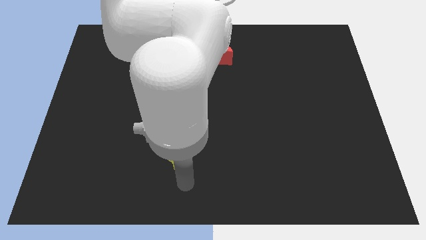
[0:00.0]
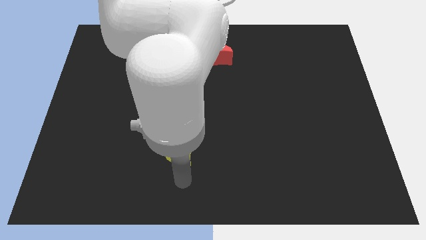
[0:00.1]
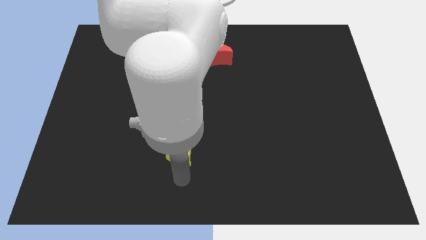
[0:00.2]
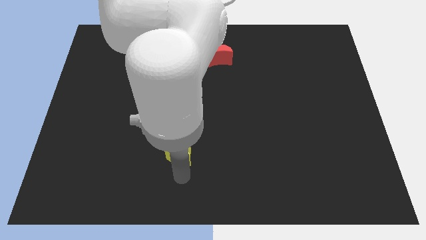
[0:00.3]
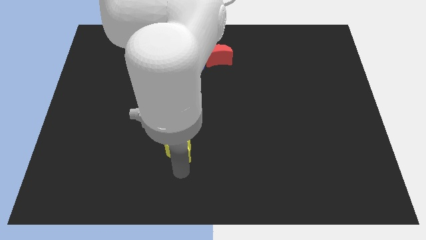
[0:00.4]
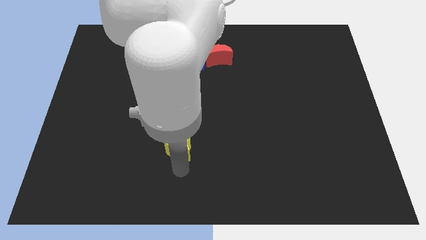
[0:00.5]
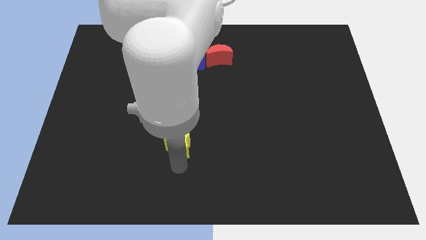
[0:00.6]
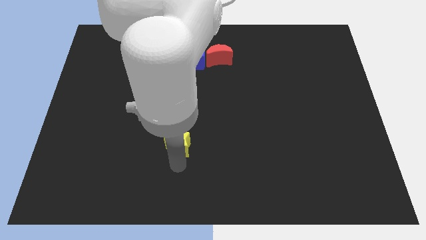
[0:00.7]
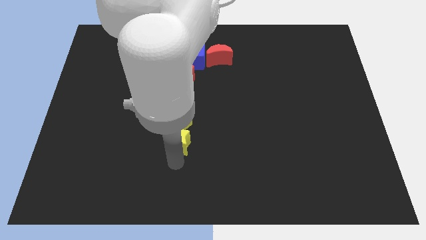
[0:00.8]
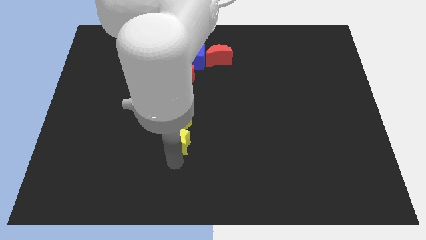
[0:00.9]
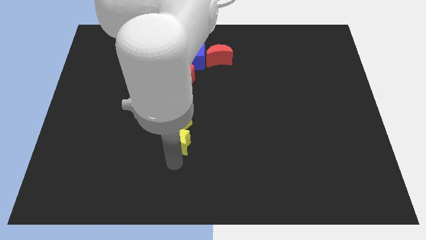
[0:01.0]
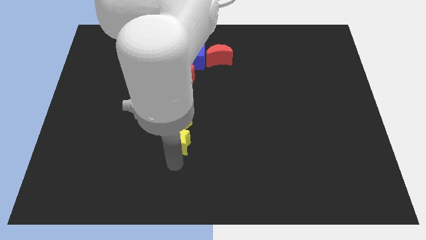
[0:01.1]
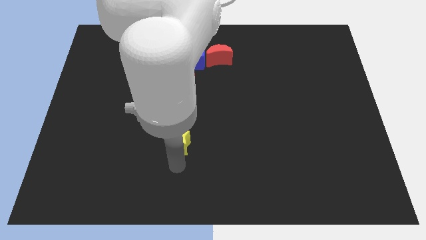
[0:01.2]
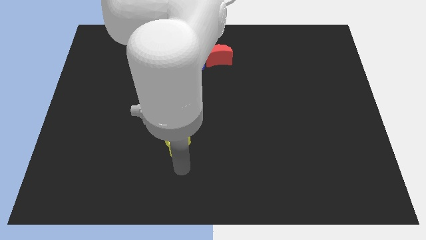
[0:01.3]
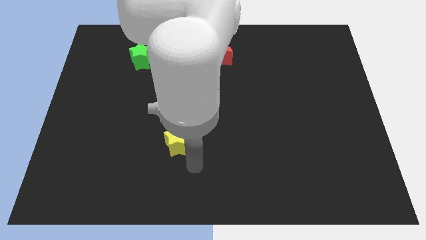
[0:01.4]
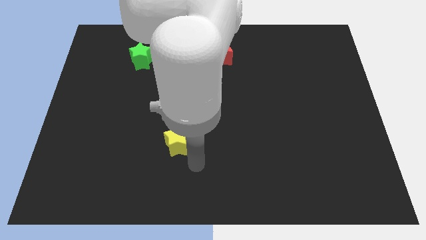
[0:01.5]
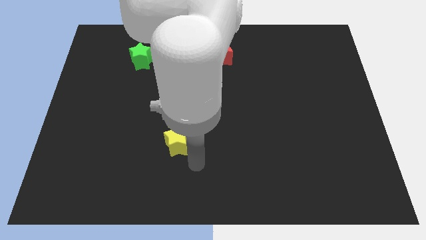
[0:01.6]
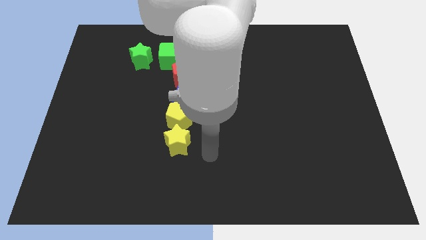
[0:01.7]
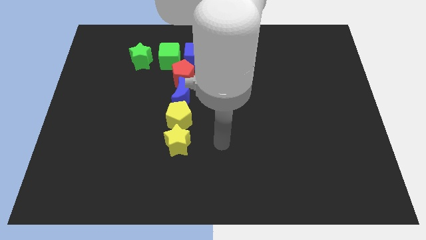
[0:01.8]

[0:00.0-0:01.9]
move the yellow star to the bottom of the yellow pentagon

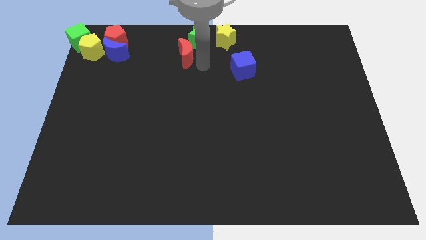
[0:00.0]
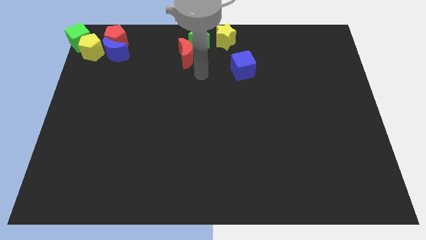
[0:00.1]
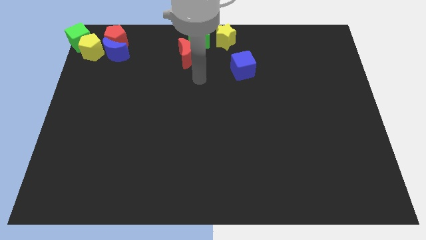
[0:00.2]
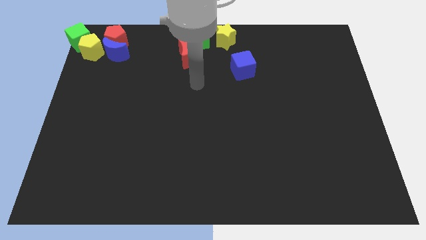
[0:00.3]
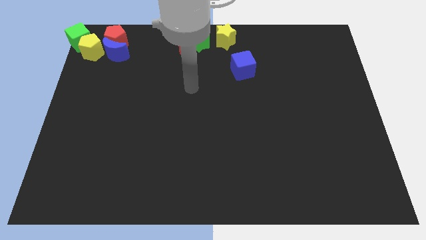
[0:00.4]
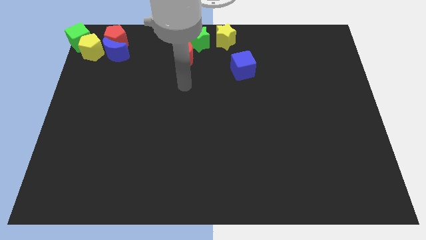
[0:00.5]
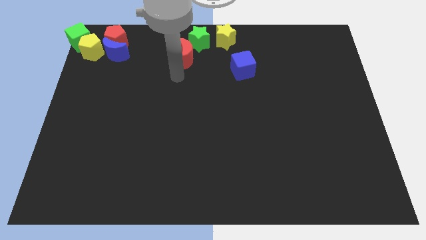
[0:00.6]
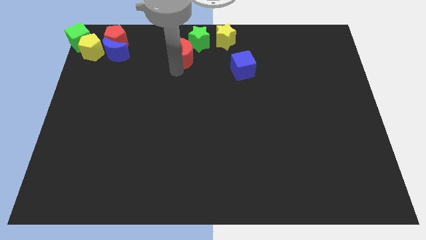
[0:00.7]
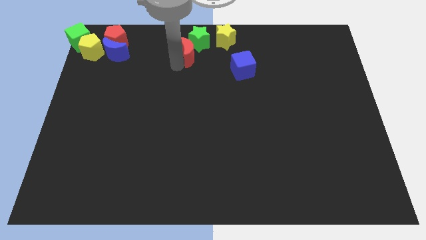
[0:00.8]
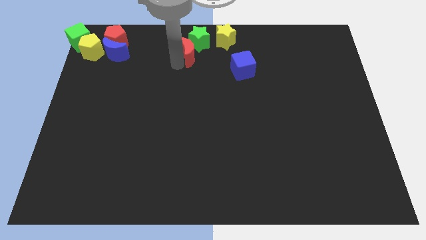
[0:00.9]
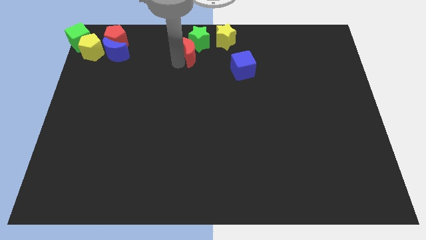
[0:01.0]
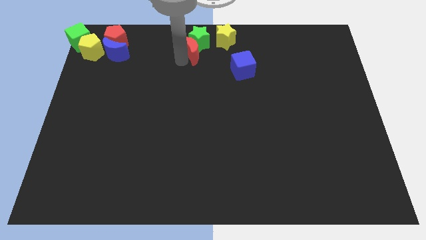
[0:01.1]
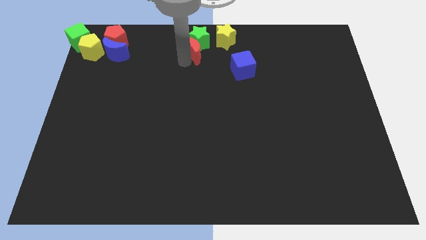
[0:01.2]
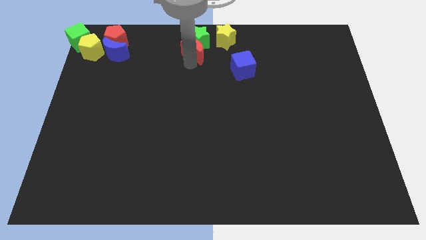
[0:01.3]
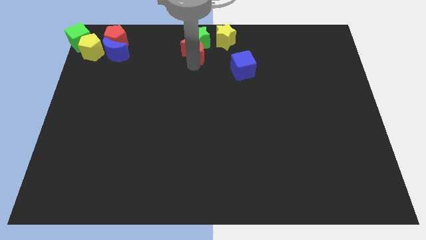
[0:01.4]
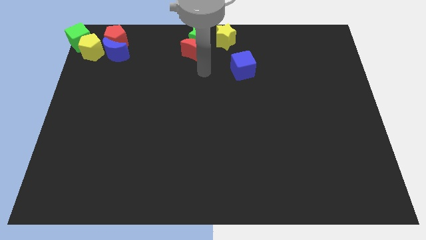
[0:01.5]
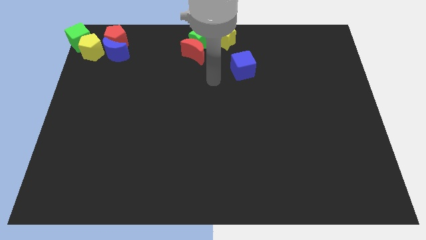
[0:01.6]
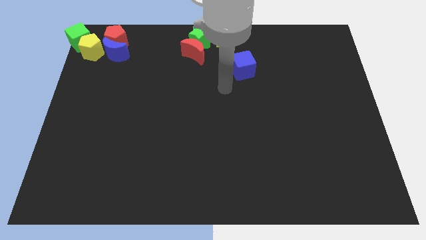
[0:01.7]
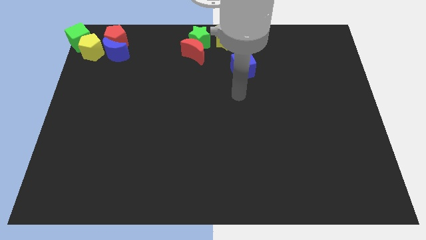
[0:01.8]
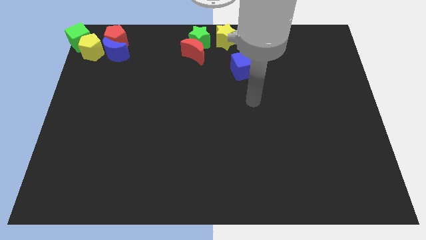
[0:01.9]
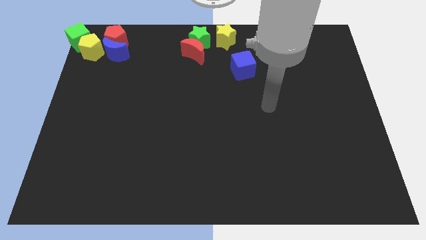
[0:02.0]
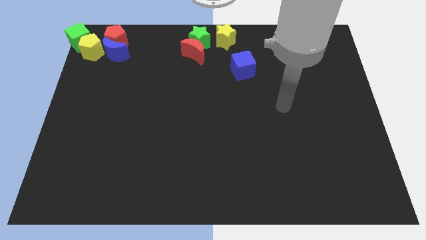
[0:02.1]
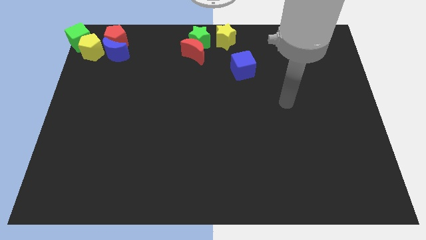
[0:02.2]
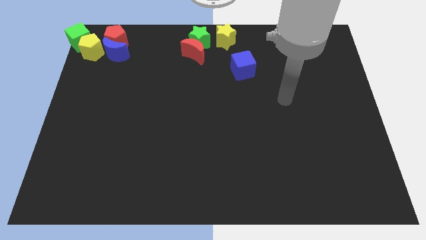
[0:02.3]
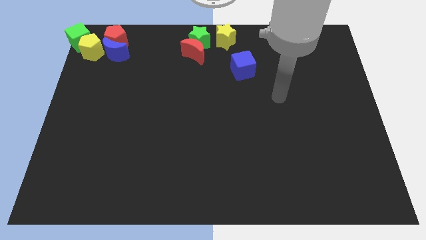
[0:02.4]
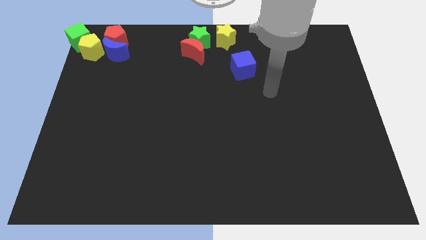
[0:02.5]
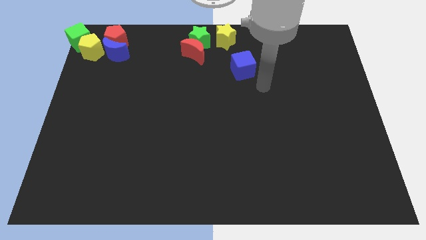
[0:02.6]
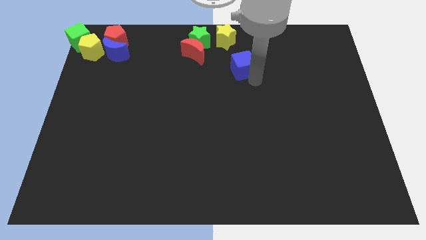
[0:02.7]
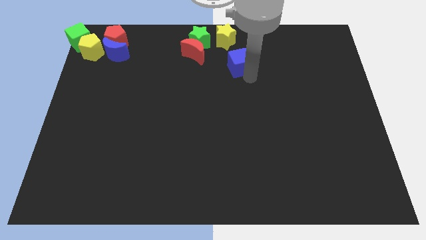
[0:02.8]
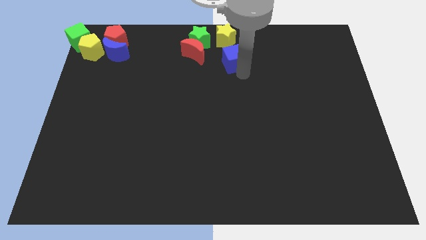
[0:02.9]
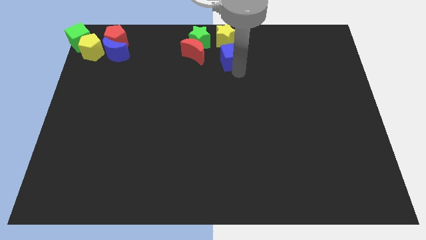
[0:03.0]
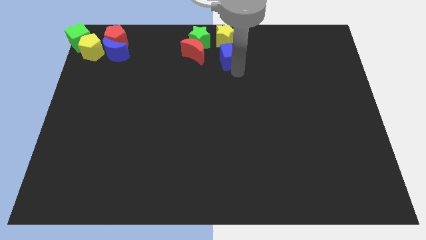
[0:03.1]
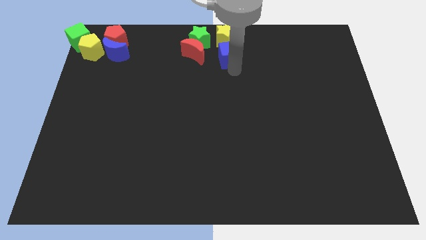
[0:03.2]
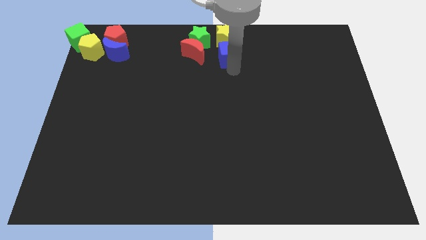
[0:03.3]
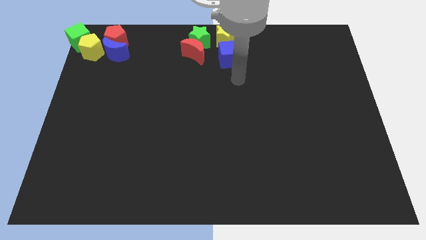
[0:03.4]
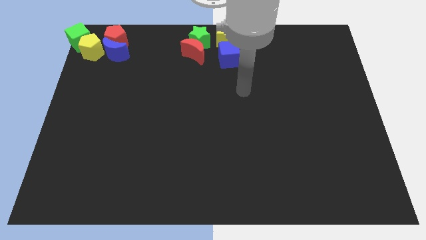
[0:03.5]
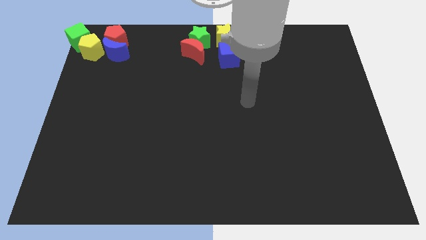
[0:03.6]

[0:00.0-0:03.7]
move the blue cube to the bottom side of the yellow star

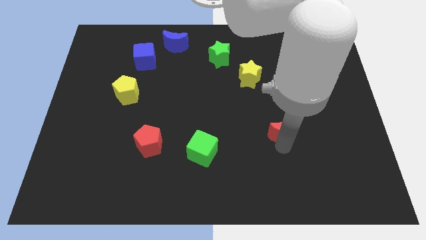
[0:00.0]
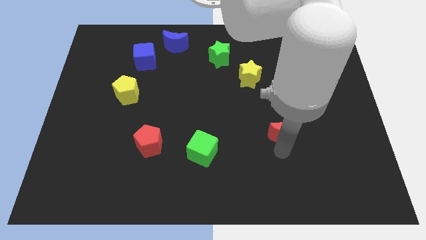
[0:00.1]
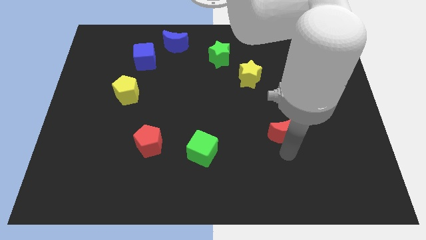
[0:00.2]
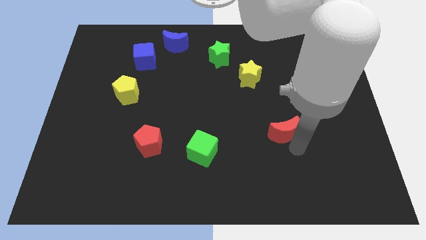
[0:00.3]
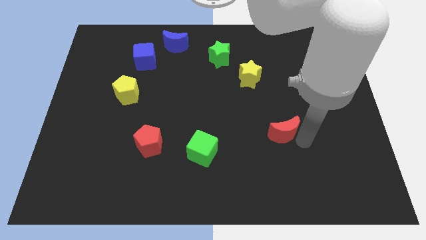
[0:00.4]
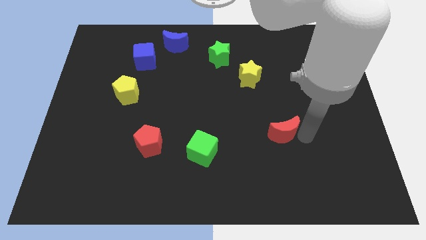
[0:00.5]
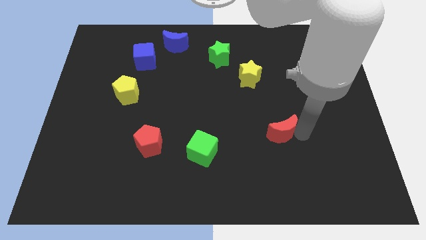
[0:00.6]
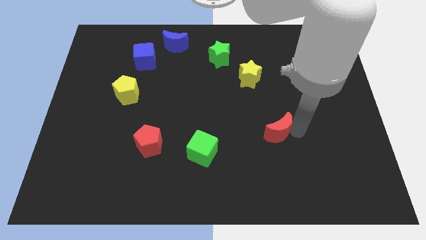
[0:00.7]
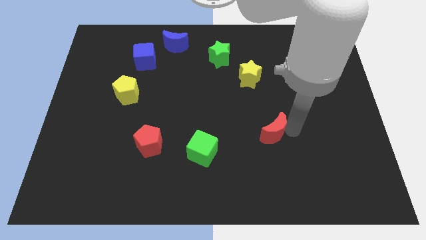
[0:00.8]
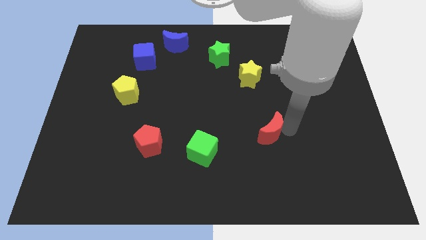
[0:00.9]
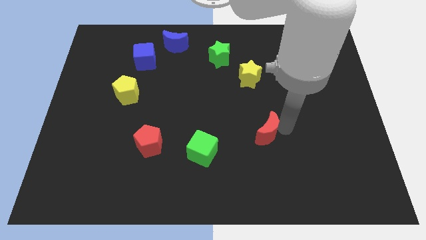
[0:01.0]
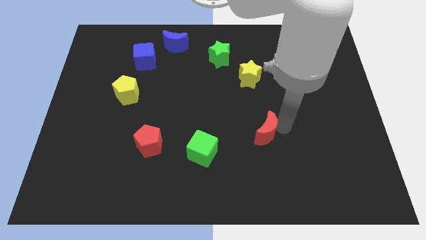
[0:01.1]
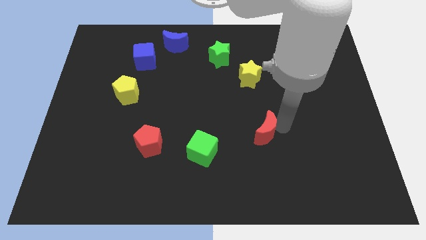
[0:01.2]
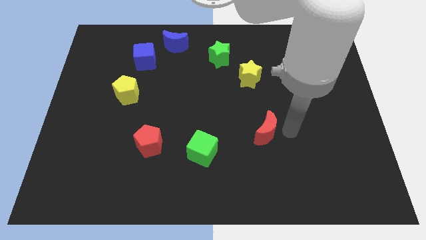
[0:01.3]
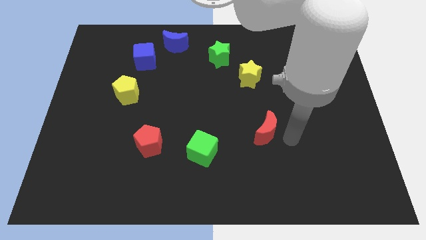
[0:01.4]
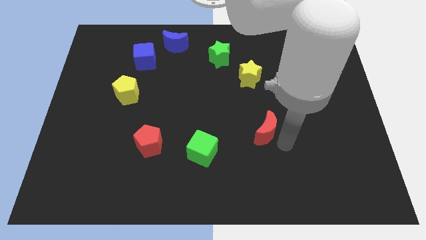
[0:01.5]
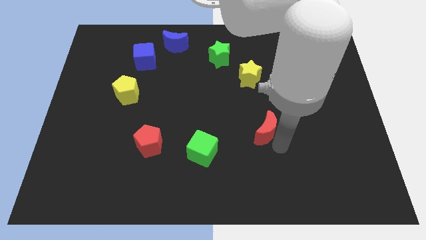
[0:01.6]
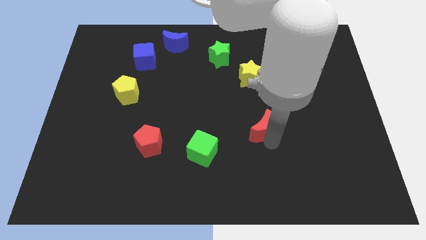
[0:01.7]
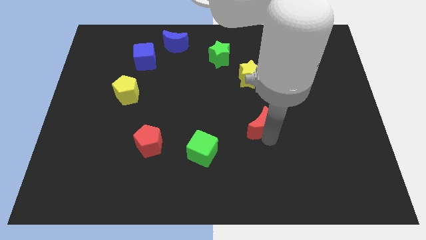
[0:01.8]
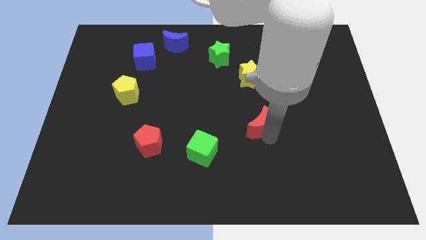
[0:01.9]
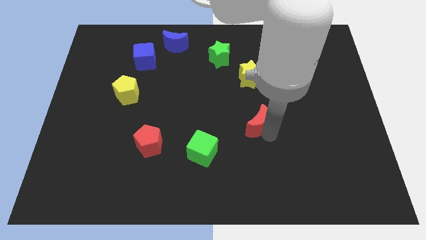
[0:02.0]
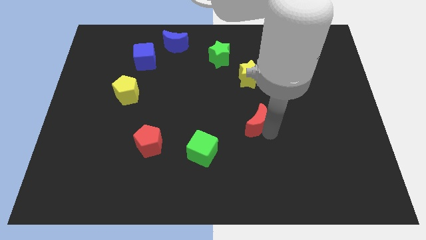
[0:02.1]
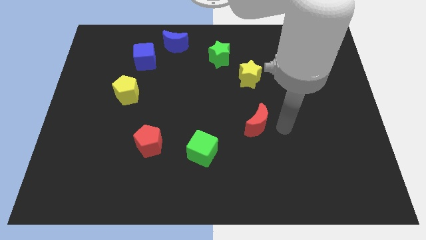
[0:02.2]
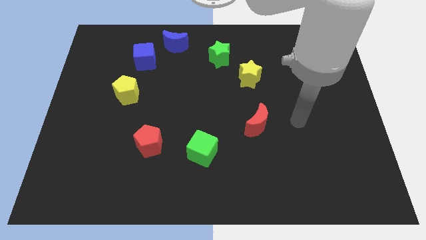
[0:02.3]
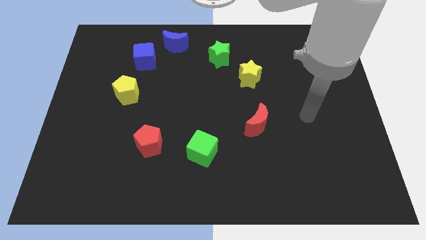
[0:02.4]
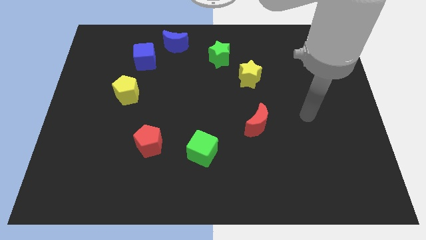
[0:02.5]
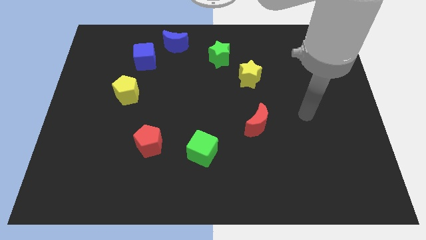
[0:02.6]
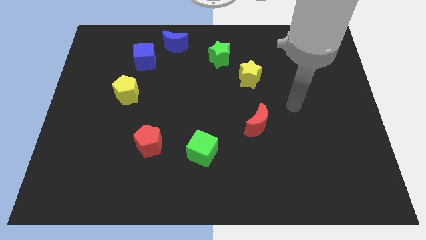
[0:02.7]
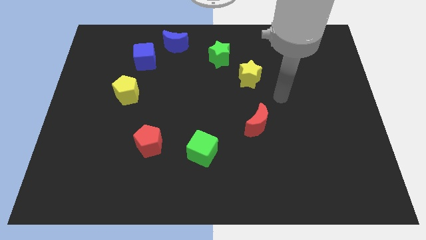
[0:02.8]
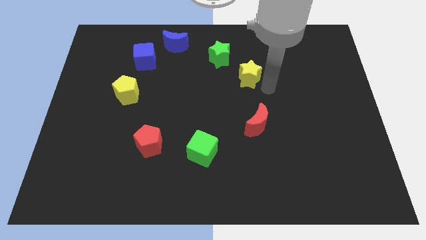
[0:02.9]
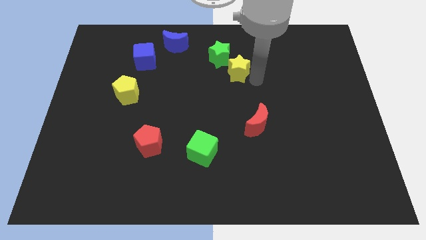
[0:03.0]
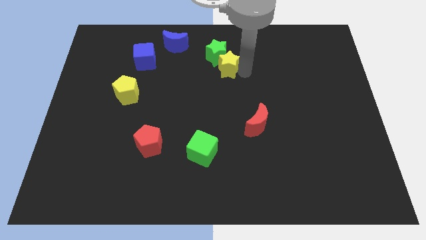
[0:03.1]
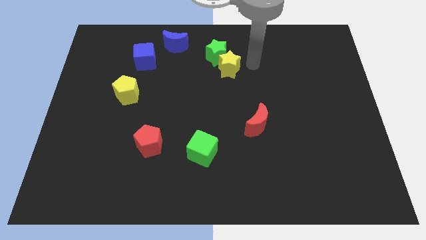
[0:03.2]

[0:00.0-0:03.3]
push the yellow star into the green star
